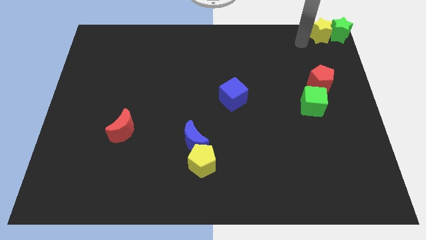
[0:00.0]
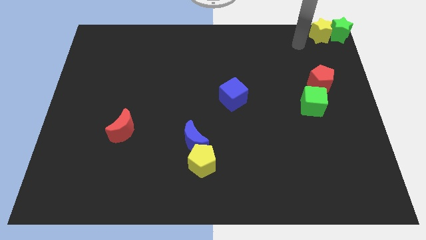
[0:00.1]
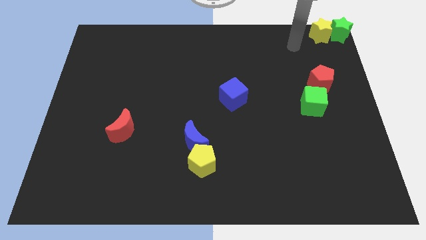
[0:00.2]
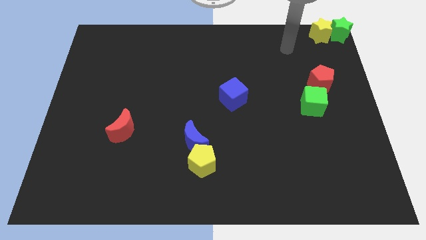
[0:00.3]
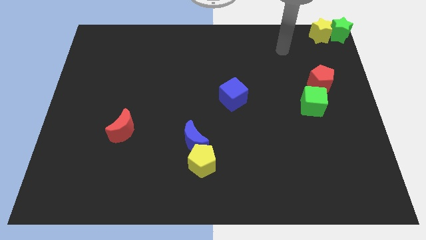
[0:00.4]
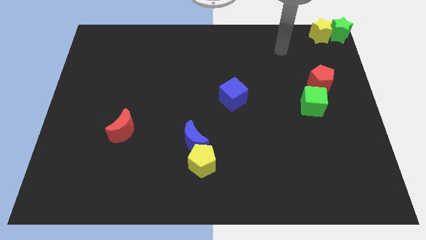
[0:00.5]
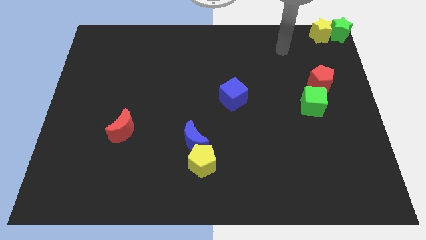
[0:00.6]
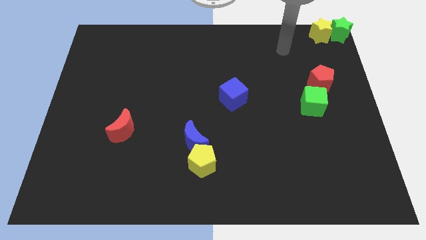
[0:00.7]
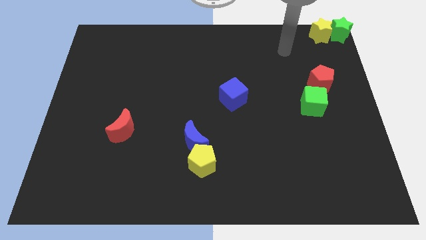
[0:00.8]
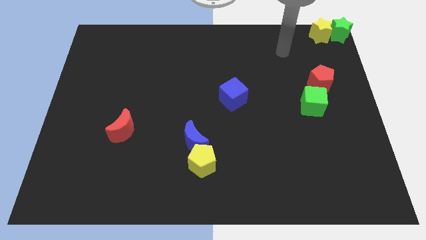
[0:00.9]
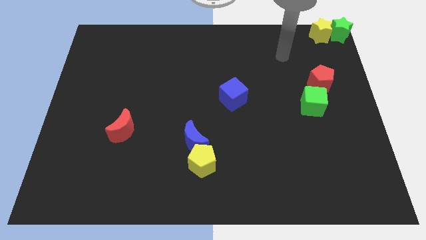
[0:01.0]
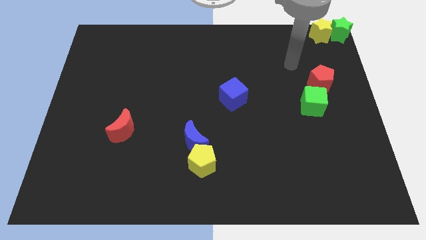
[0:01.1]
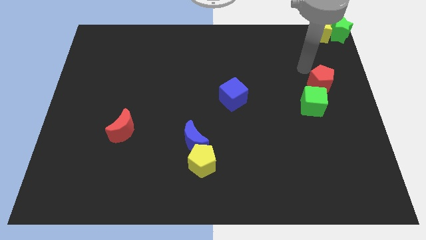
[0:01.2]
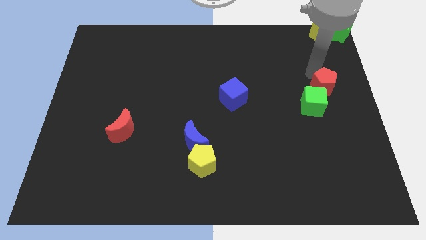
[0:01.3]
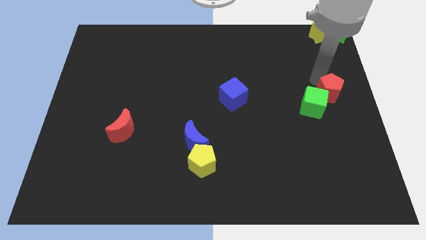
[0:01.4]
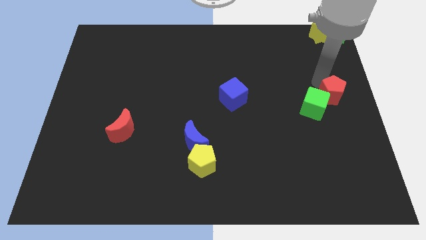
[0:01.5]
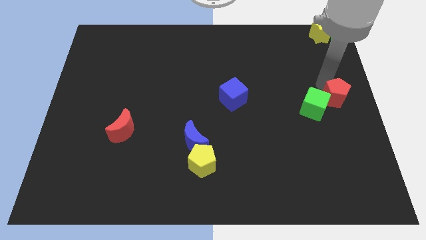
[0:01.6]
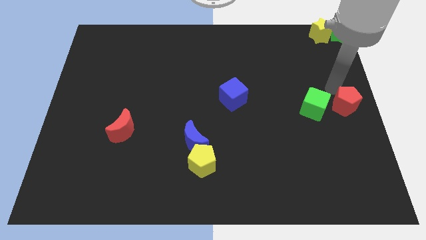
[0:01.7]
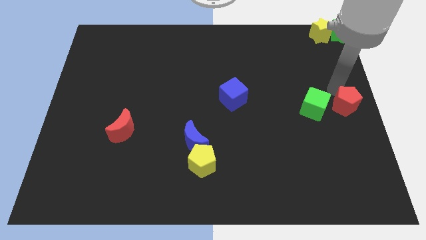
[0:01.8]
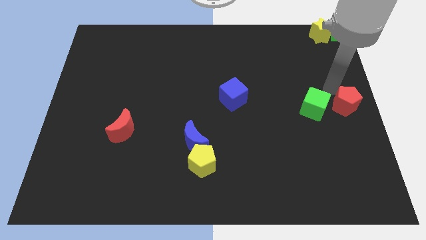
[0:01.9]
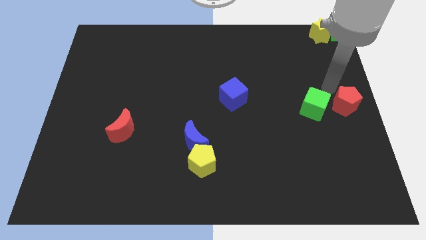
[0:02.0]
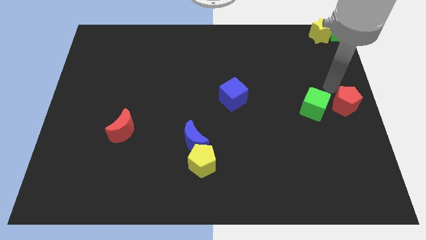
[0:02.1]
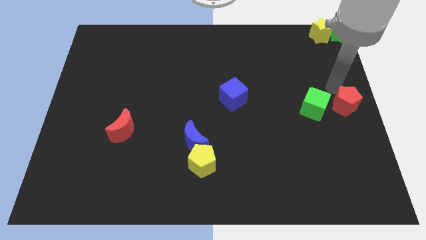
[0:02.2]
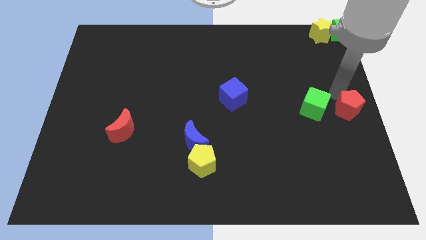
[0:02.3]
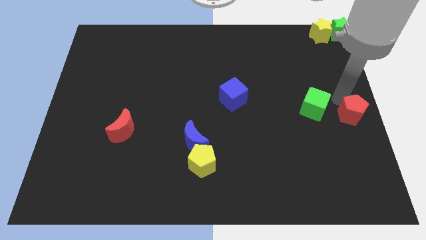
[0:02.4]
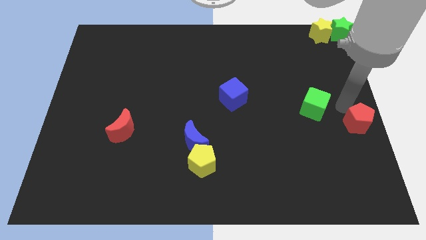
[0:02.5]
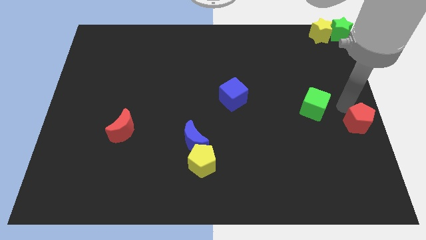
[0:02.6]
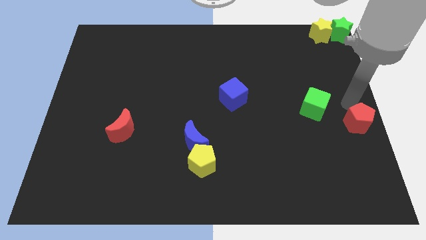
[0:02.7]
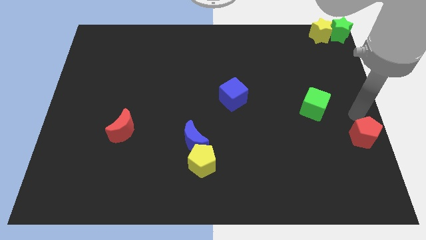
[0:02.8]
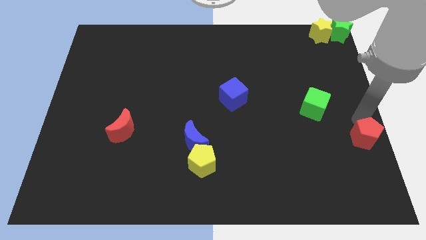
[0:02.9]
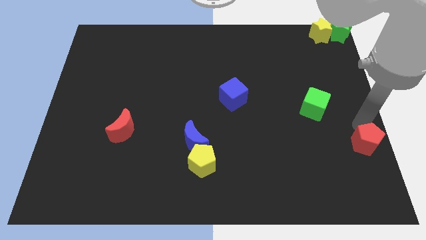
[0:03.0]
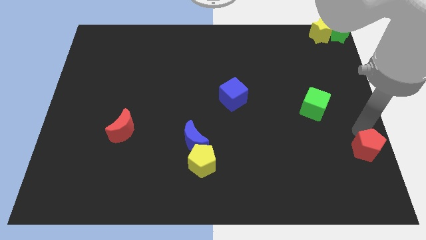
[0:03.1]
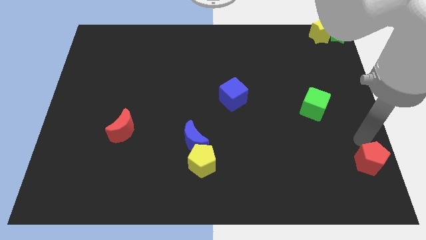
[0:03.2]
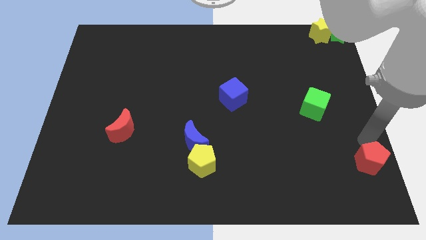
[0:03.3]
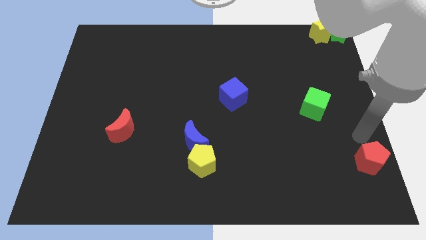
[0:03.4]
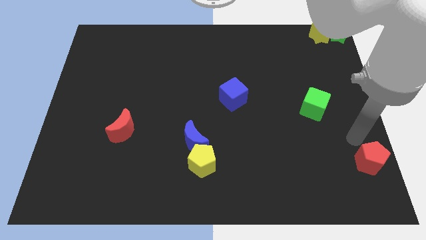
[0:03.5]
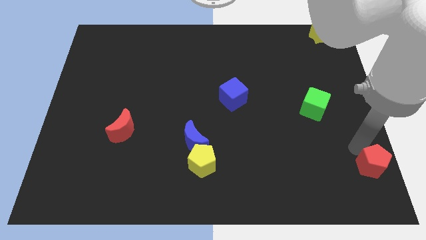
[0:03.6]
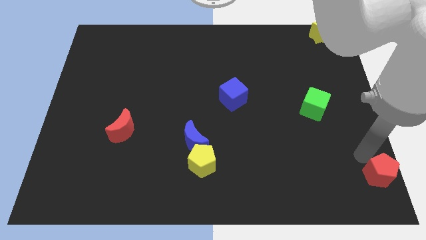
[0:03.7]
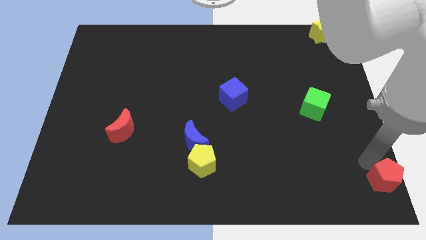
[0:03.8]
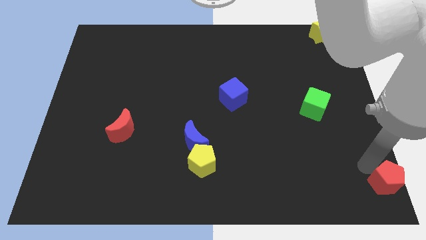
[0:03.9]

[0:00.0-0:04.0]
separate red pentagon from the green cube

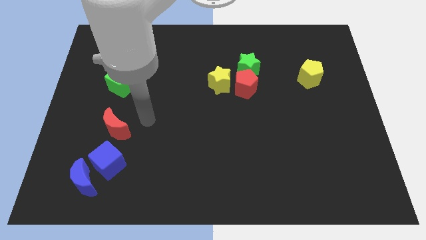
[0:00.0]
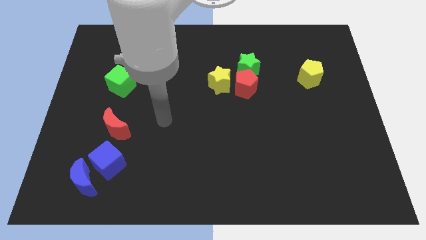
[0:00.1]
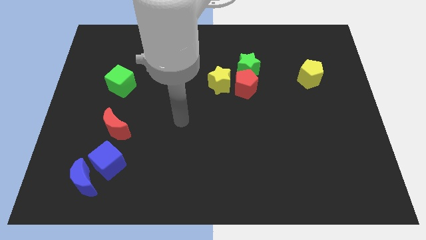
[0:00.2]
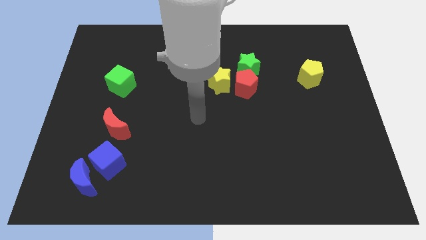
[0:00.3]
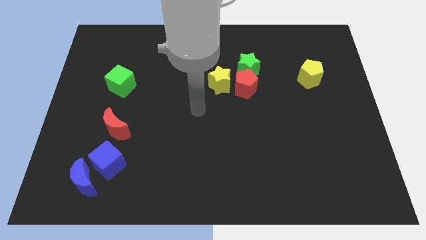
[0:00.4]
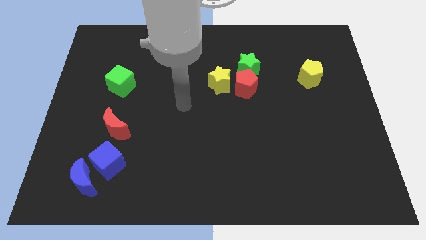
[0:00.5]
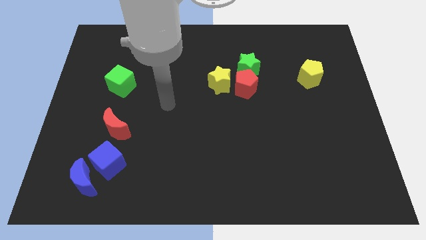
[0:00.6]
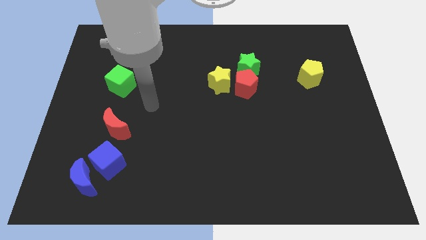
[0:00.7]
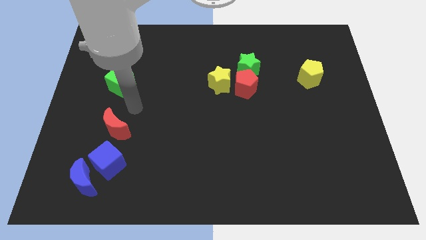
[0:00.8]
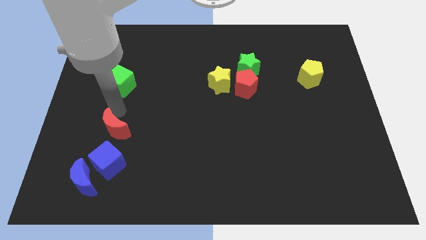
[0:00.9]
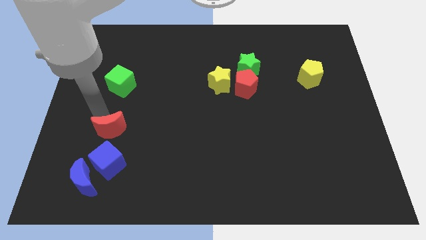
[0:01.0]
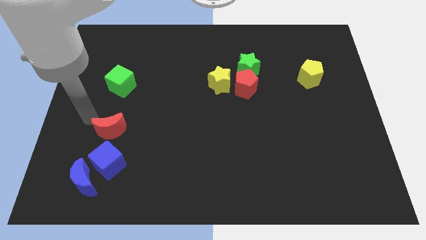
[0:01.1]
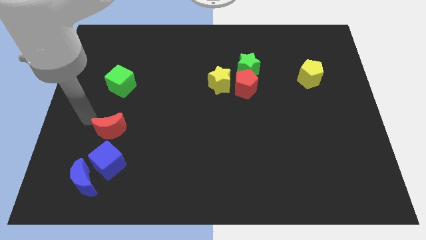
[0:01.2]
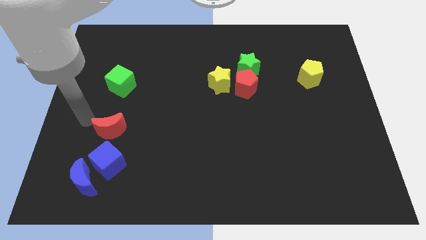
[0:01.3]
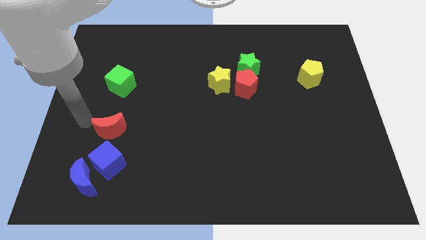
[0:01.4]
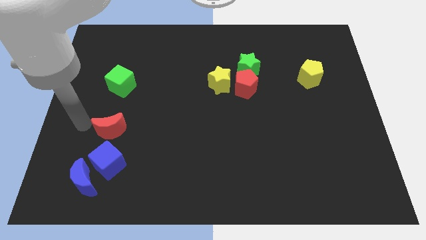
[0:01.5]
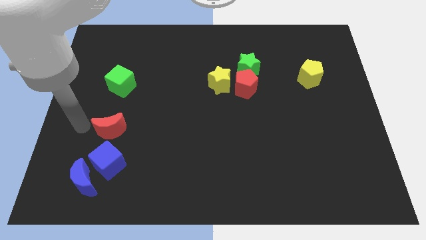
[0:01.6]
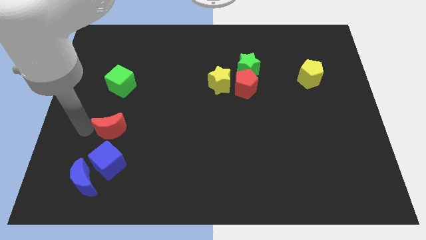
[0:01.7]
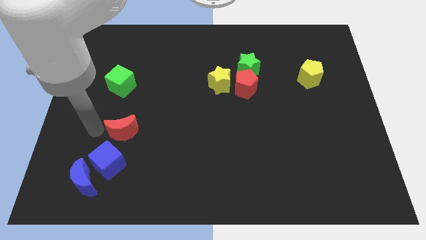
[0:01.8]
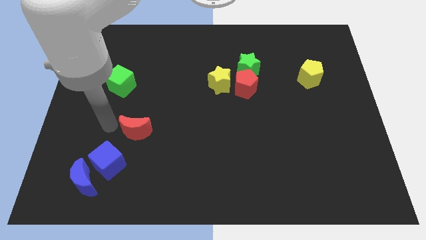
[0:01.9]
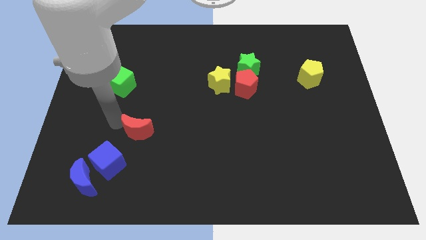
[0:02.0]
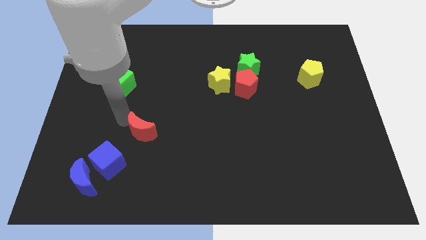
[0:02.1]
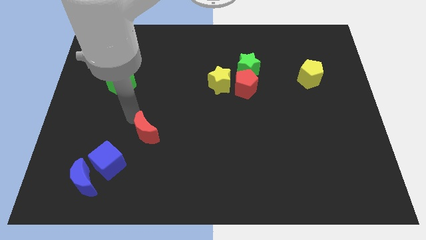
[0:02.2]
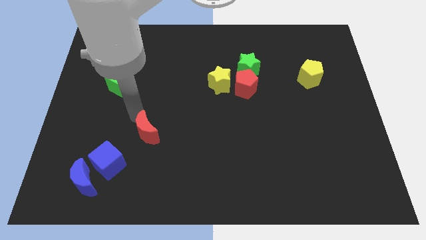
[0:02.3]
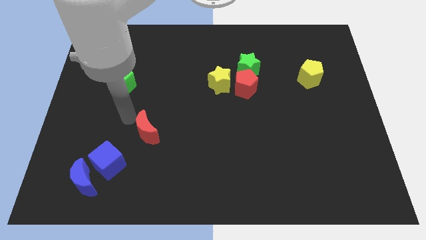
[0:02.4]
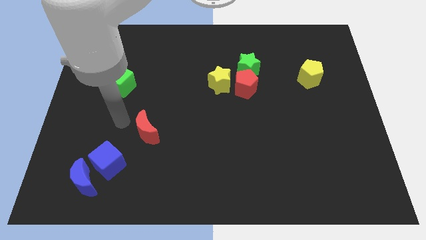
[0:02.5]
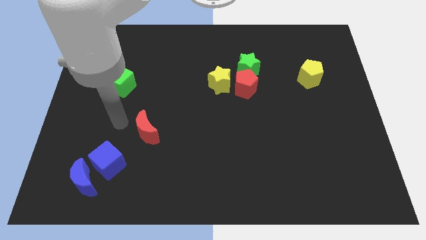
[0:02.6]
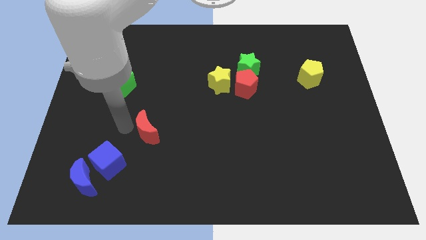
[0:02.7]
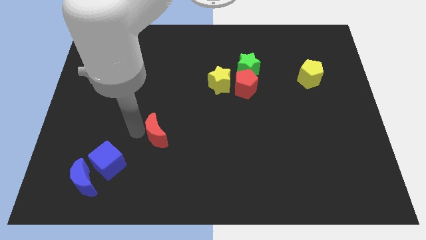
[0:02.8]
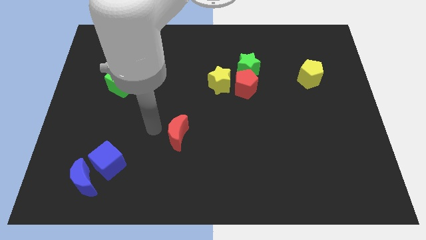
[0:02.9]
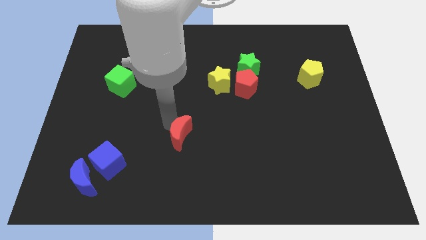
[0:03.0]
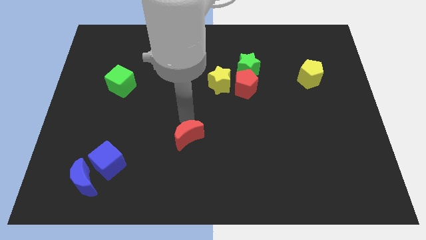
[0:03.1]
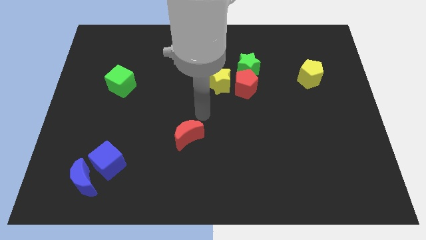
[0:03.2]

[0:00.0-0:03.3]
move the red crescent towards the right to form a triangle with green cube and the yellow star

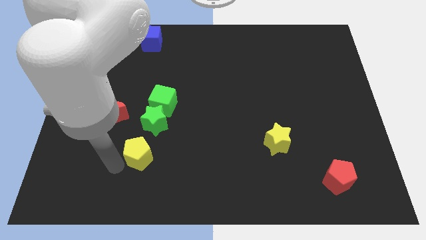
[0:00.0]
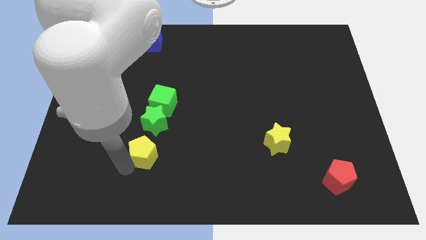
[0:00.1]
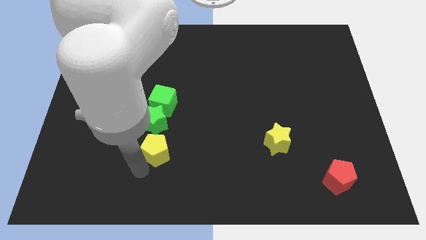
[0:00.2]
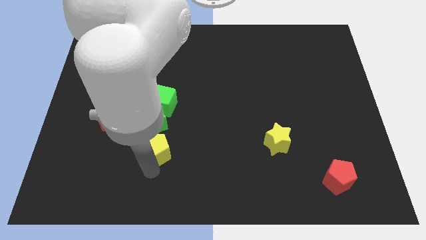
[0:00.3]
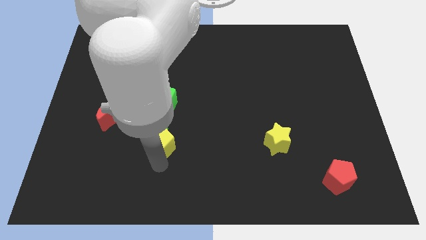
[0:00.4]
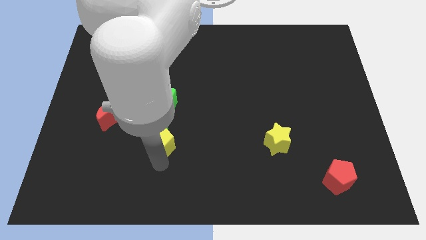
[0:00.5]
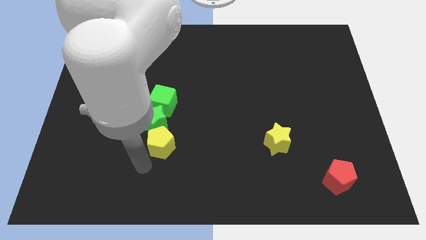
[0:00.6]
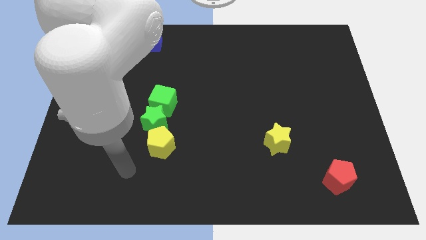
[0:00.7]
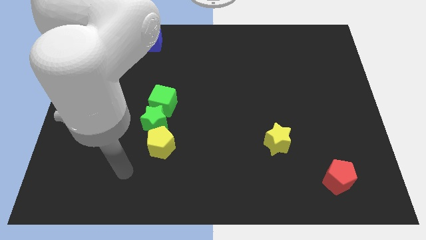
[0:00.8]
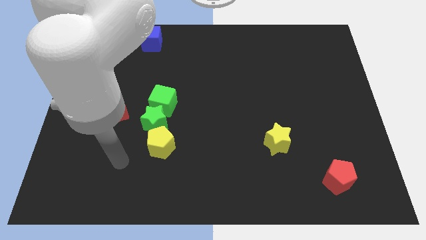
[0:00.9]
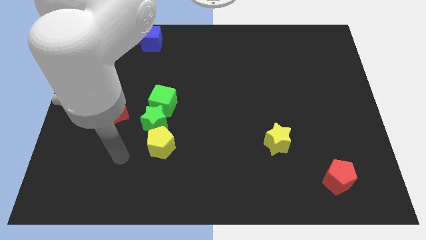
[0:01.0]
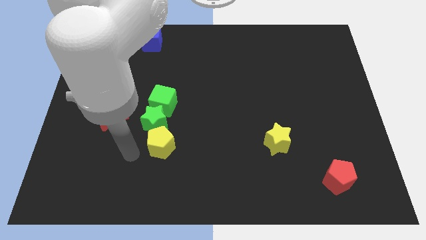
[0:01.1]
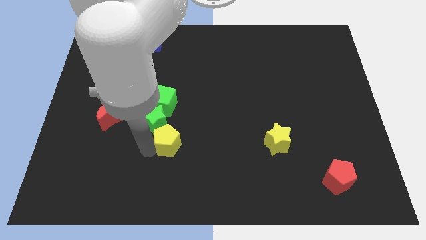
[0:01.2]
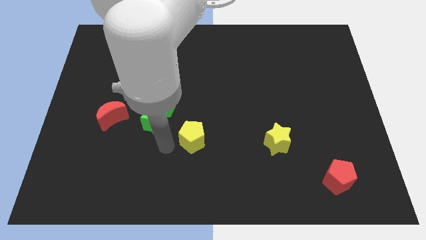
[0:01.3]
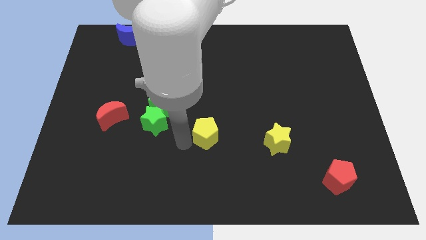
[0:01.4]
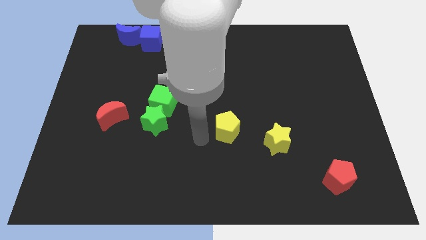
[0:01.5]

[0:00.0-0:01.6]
put the yellow pentagon between the yellow star and green star

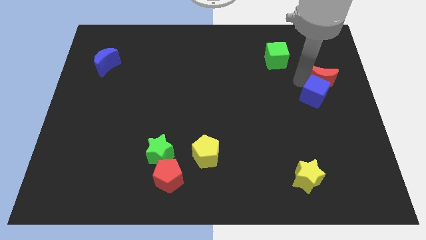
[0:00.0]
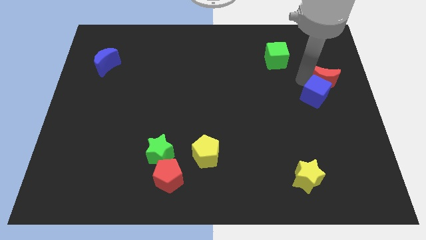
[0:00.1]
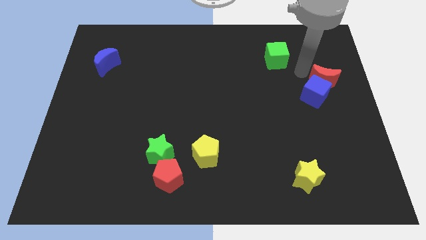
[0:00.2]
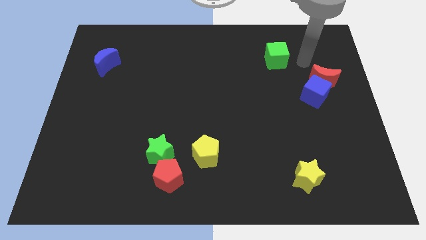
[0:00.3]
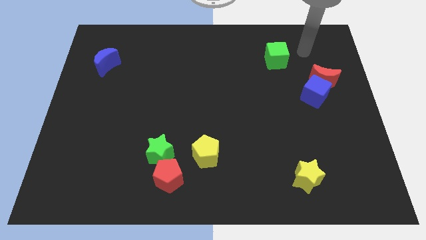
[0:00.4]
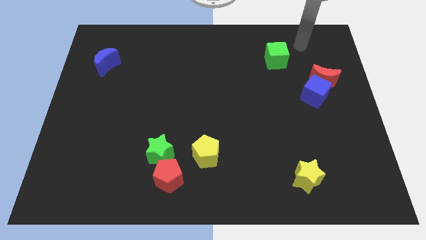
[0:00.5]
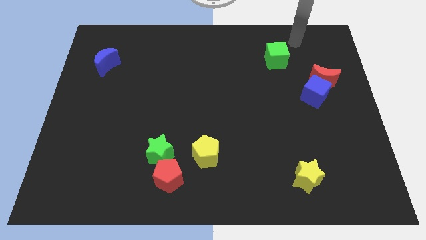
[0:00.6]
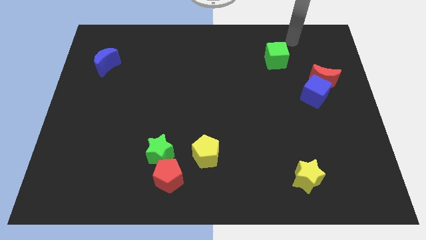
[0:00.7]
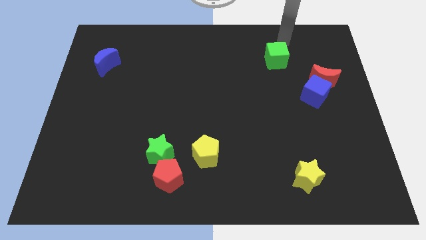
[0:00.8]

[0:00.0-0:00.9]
point your arm above green cube
